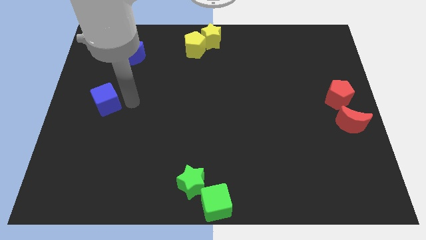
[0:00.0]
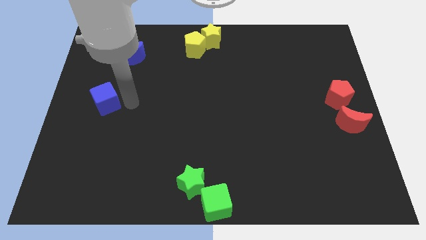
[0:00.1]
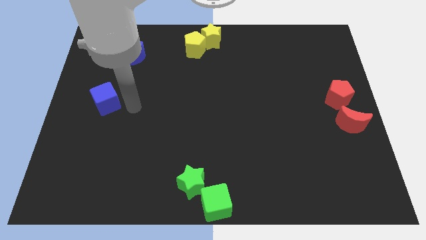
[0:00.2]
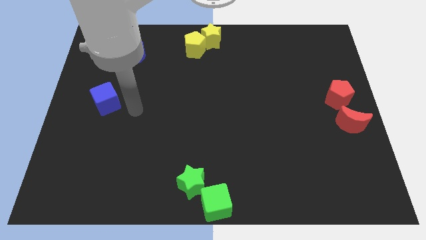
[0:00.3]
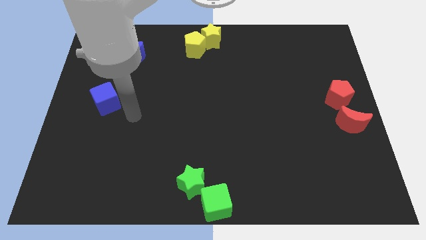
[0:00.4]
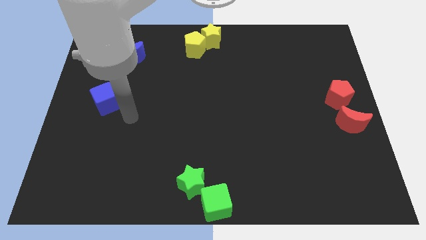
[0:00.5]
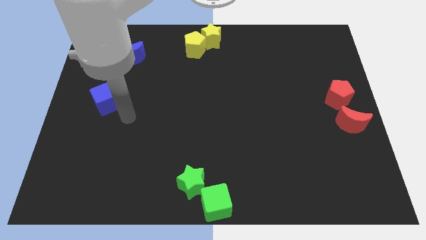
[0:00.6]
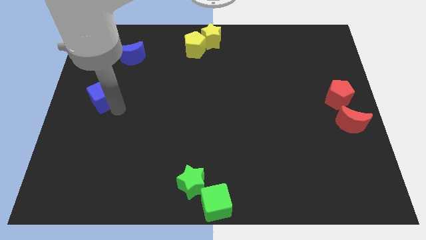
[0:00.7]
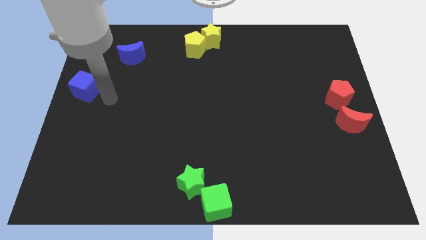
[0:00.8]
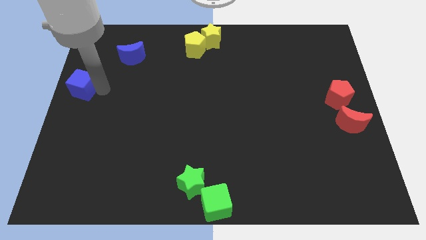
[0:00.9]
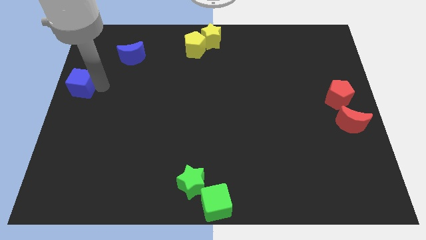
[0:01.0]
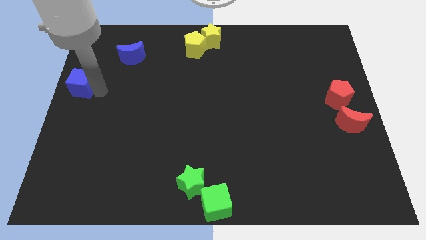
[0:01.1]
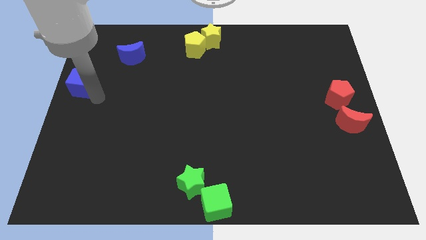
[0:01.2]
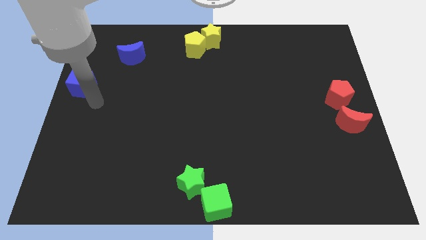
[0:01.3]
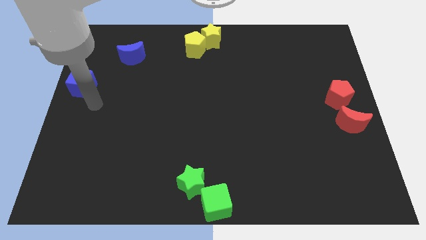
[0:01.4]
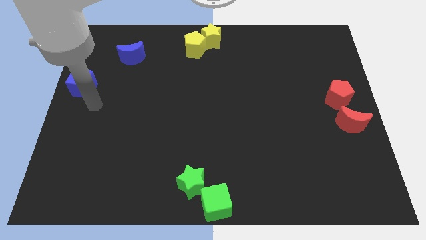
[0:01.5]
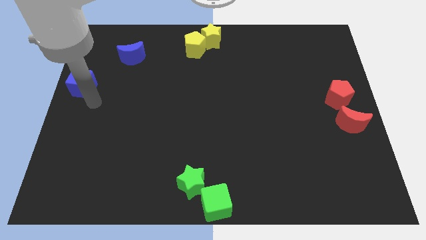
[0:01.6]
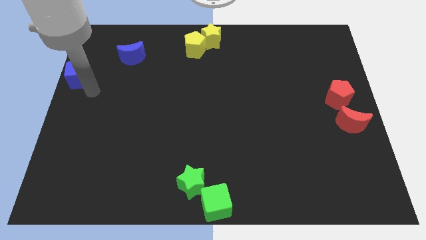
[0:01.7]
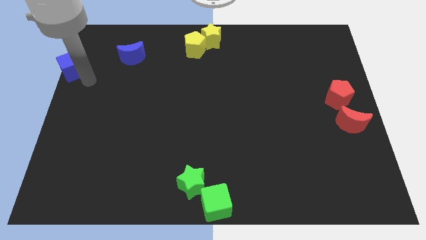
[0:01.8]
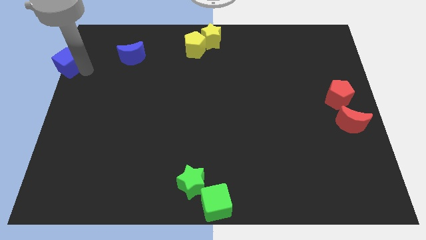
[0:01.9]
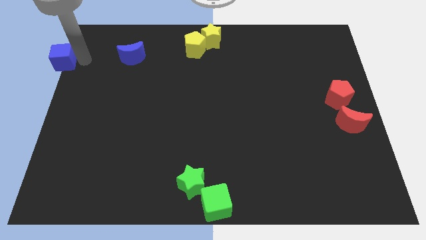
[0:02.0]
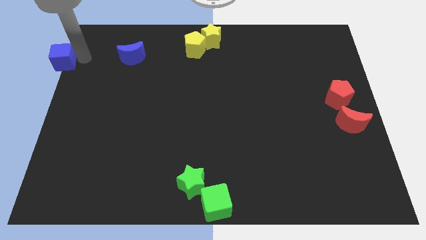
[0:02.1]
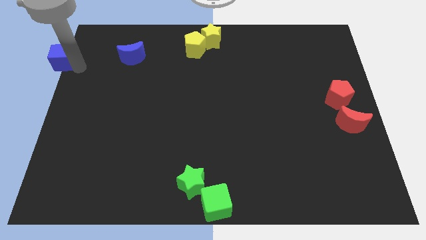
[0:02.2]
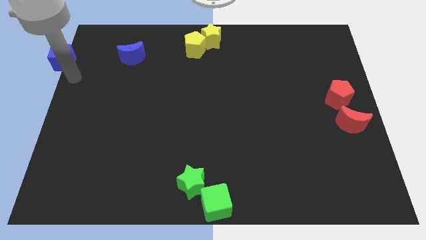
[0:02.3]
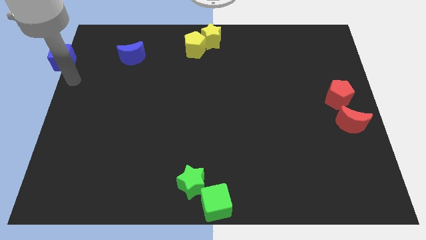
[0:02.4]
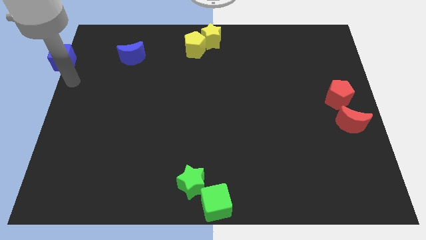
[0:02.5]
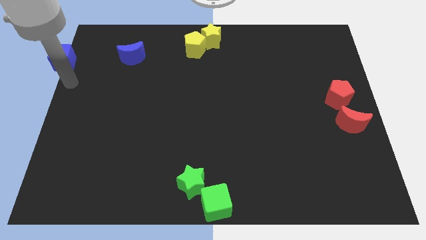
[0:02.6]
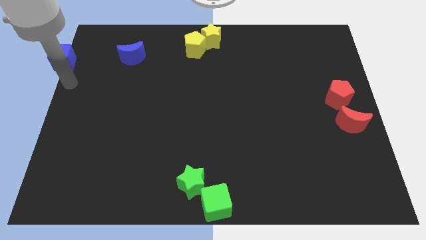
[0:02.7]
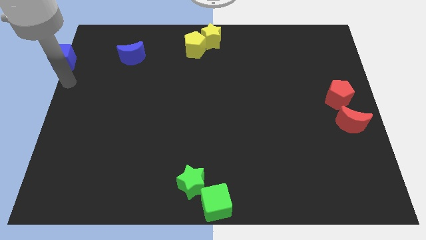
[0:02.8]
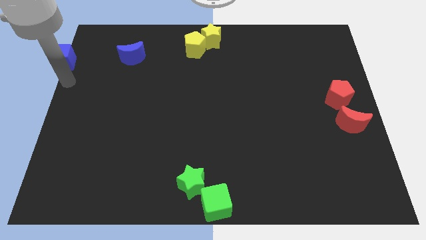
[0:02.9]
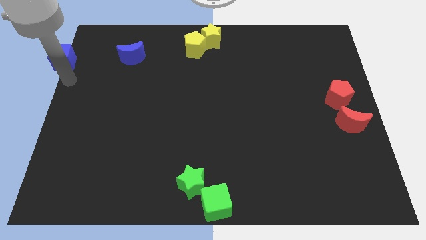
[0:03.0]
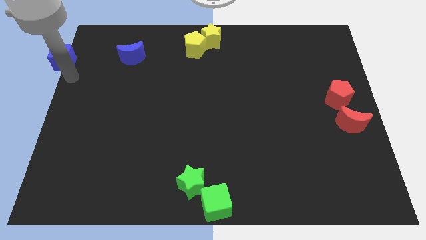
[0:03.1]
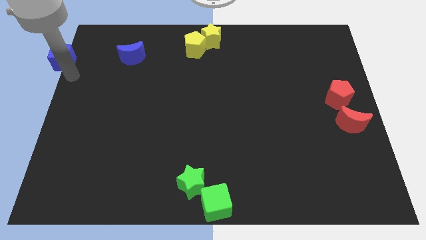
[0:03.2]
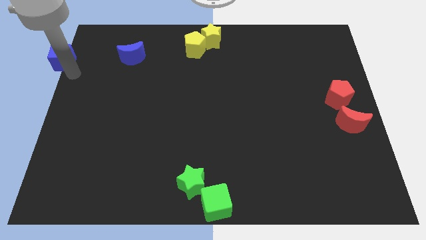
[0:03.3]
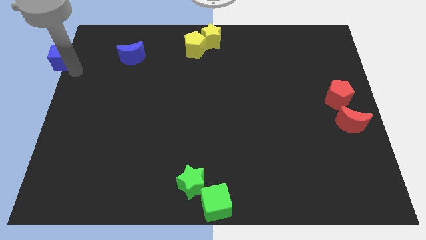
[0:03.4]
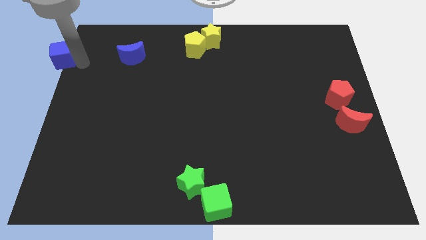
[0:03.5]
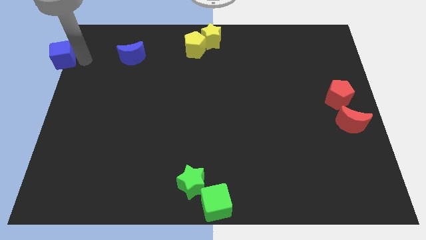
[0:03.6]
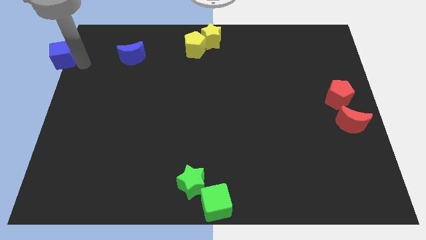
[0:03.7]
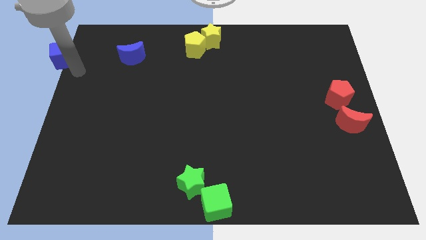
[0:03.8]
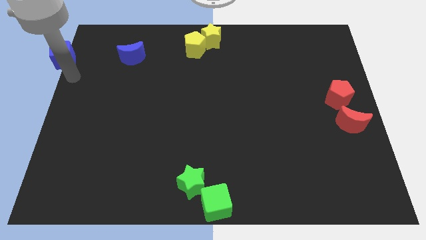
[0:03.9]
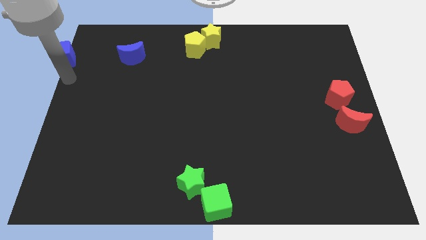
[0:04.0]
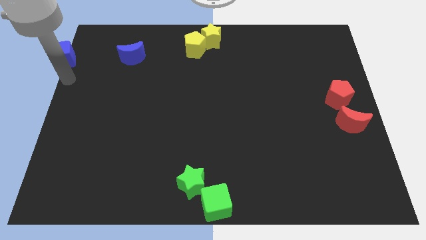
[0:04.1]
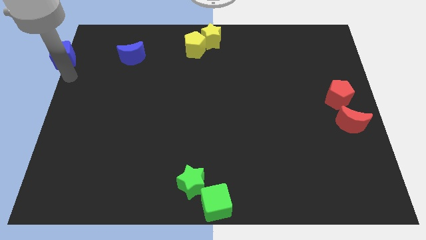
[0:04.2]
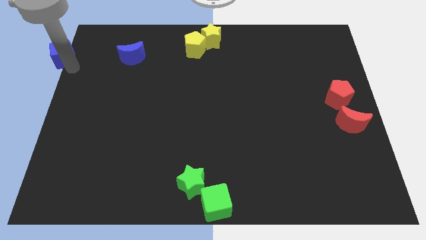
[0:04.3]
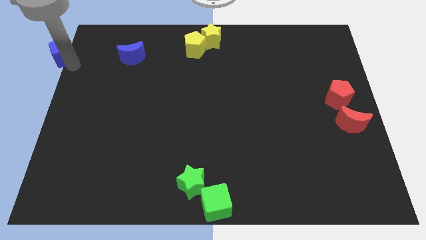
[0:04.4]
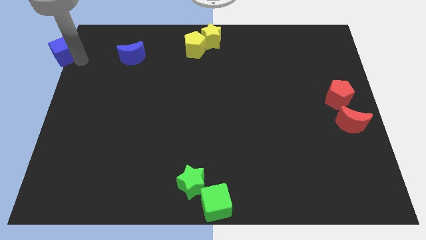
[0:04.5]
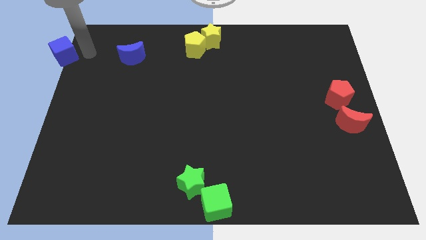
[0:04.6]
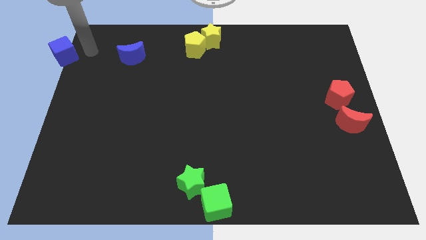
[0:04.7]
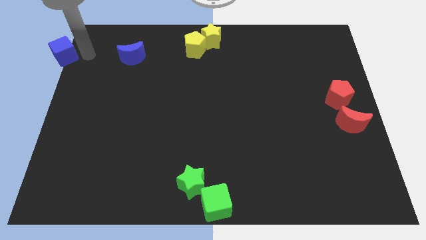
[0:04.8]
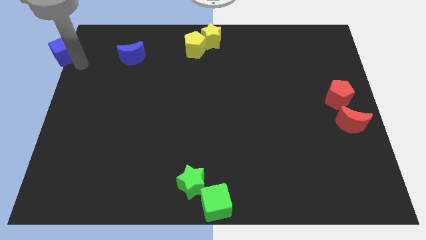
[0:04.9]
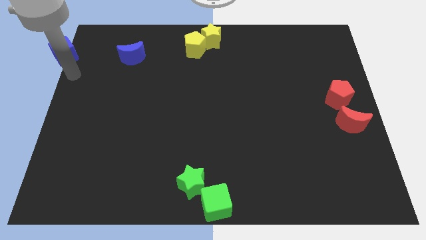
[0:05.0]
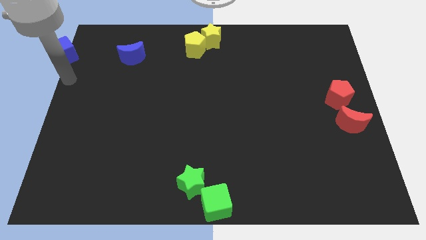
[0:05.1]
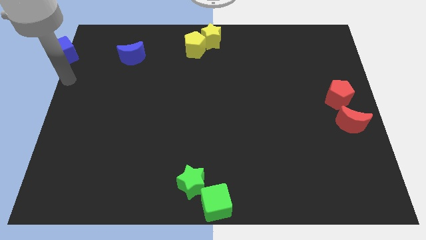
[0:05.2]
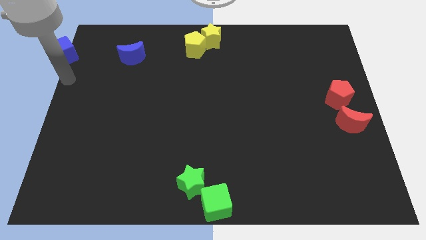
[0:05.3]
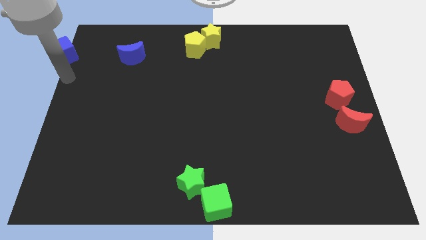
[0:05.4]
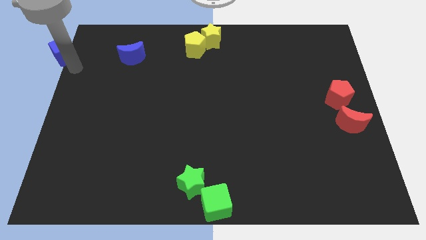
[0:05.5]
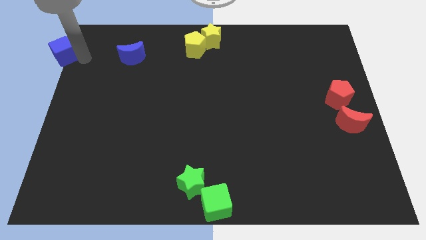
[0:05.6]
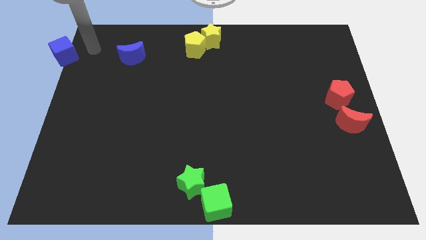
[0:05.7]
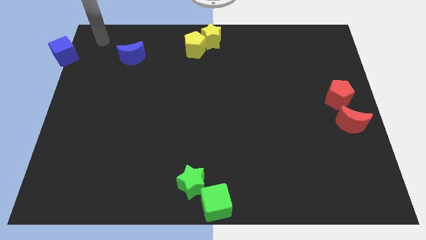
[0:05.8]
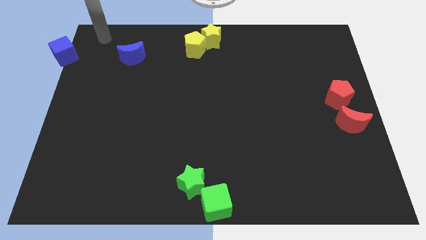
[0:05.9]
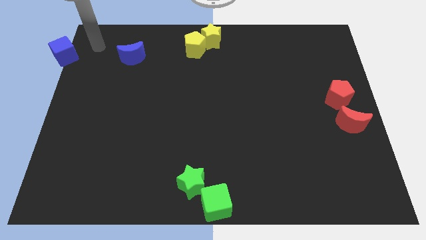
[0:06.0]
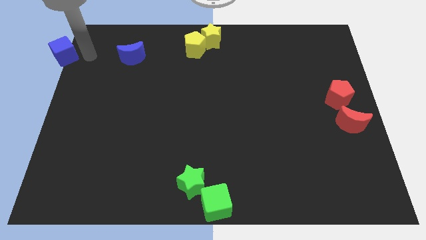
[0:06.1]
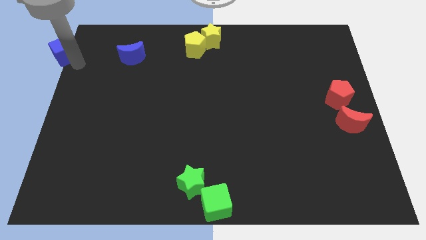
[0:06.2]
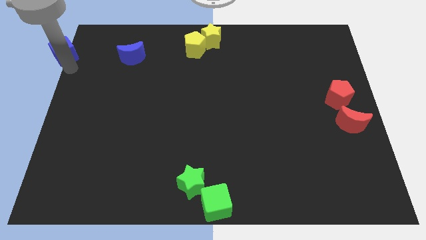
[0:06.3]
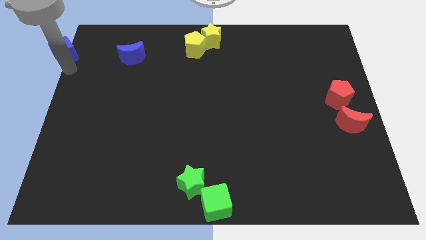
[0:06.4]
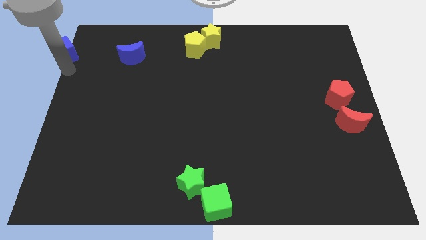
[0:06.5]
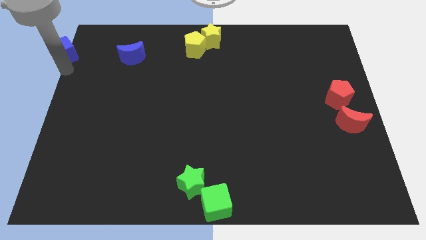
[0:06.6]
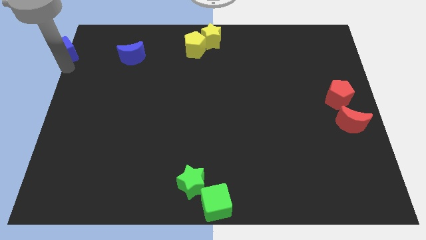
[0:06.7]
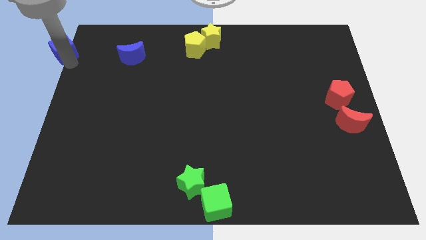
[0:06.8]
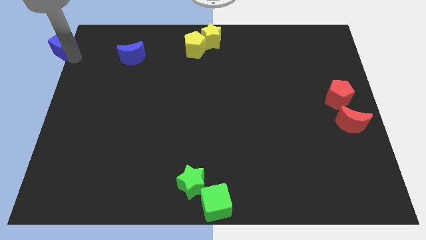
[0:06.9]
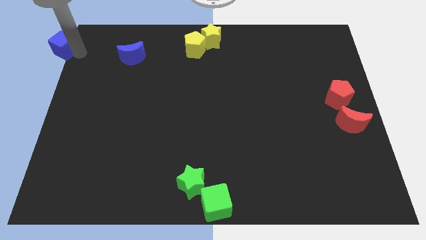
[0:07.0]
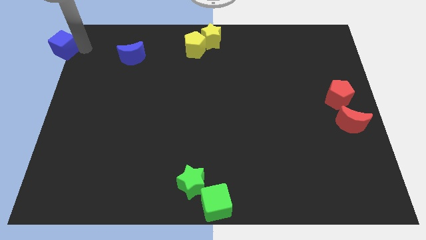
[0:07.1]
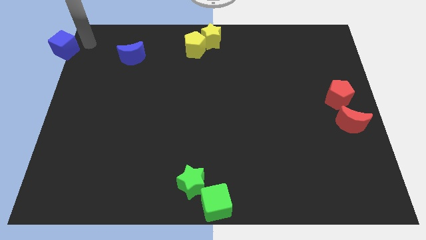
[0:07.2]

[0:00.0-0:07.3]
move the blue cube to the top left corner of the board

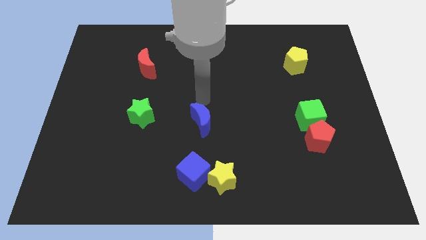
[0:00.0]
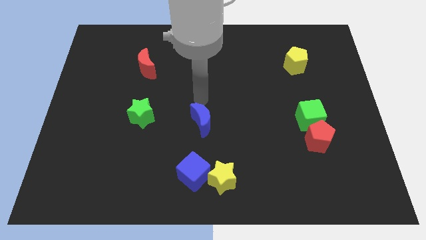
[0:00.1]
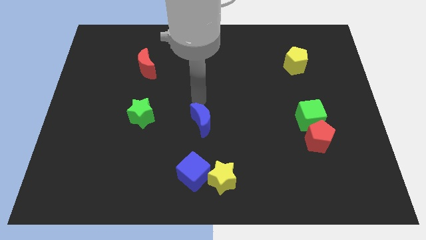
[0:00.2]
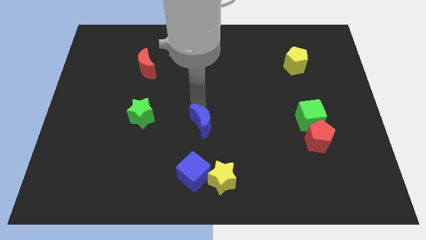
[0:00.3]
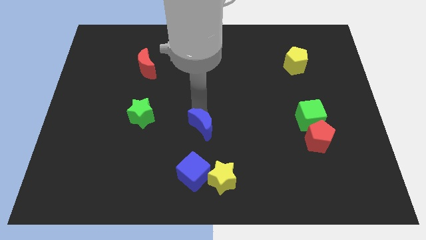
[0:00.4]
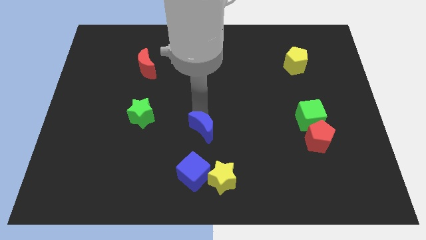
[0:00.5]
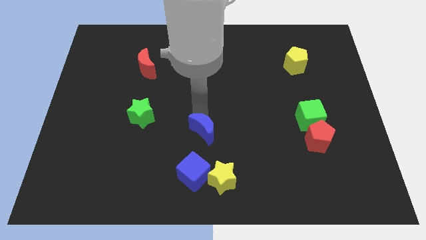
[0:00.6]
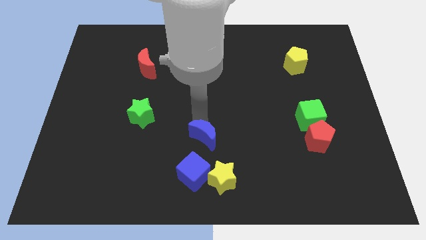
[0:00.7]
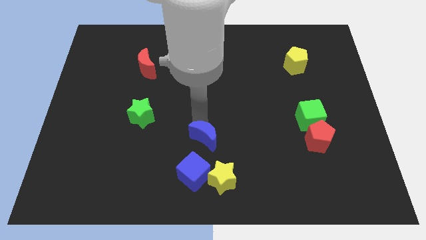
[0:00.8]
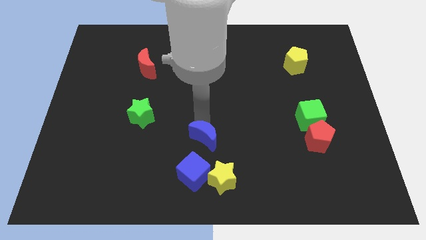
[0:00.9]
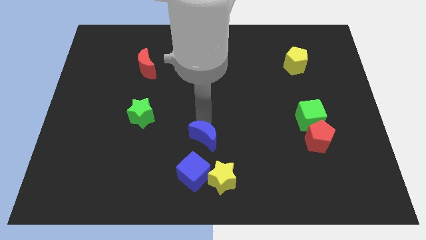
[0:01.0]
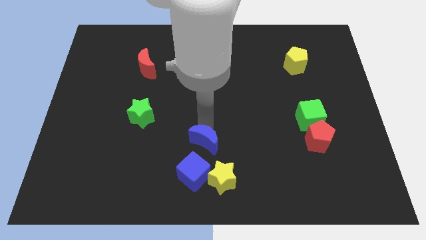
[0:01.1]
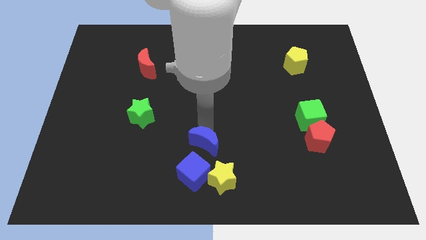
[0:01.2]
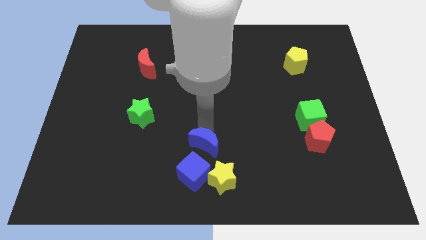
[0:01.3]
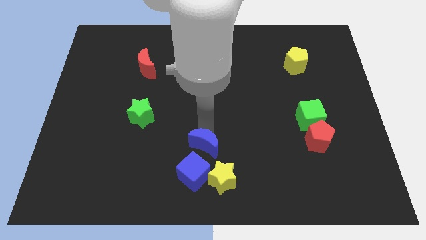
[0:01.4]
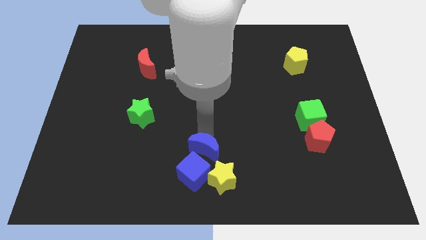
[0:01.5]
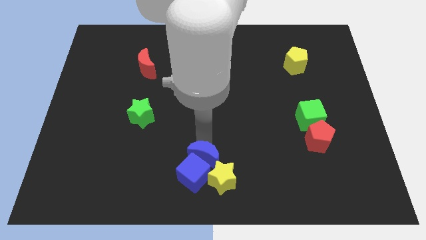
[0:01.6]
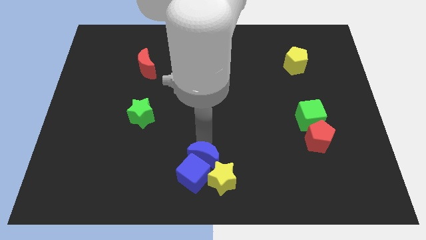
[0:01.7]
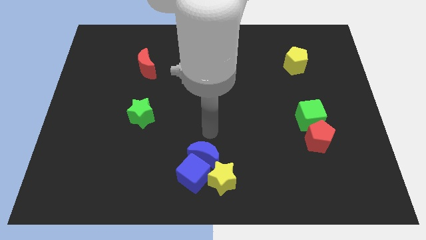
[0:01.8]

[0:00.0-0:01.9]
push the blue moon into the blue cube
